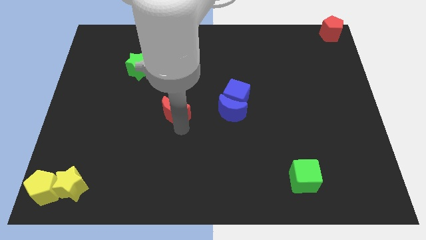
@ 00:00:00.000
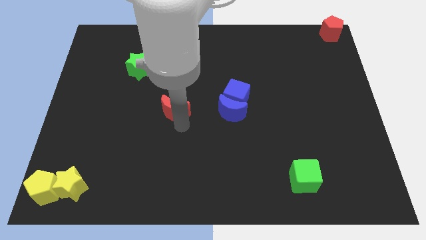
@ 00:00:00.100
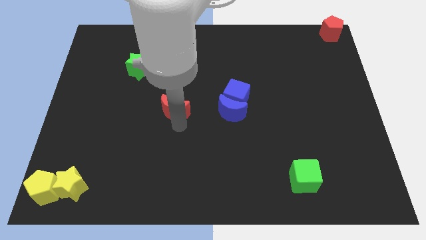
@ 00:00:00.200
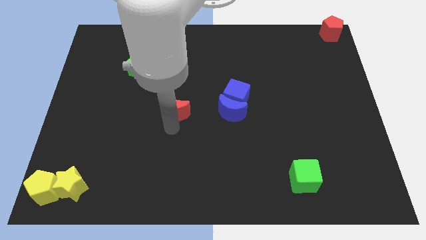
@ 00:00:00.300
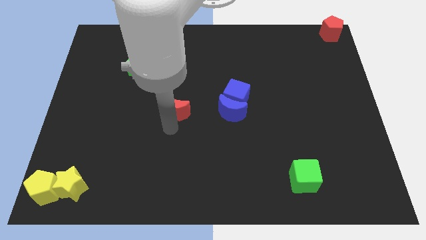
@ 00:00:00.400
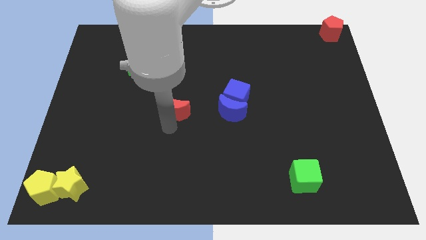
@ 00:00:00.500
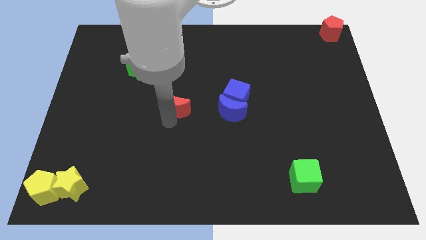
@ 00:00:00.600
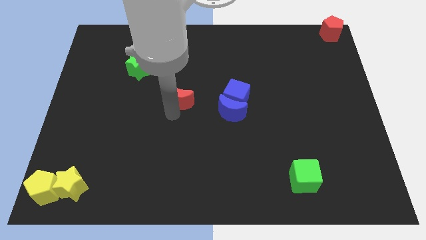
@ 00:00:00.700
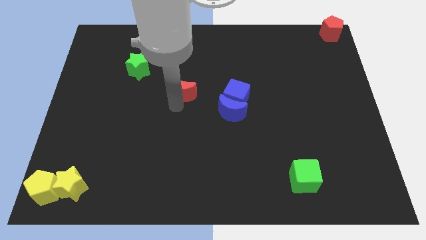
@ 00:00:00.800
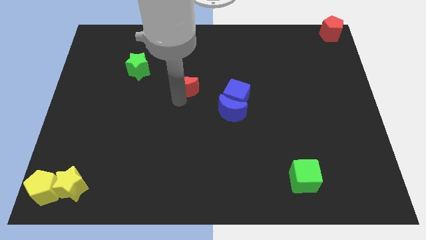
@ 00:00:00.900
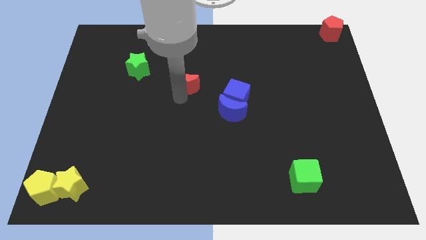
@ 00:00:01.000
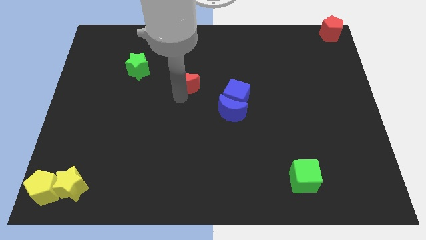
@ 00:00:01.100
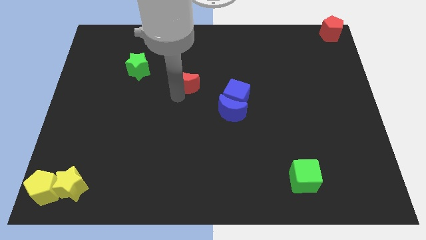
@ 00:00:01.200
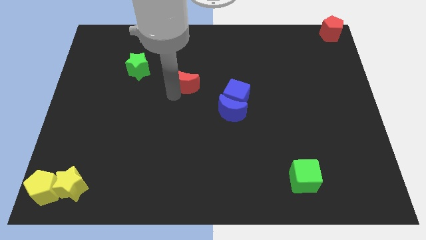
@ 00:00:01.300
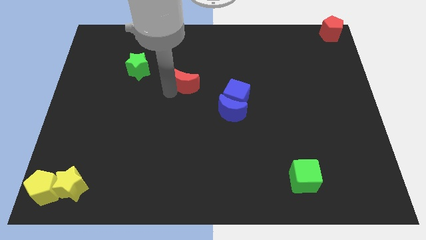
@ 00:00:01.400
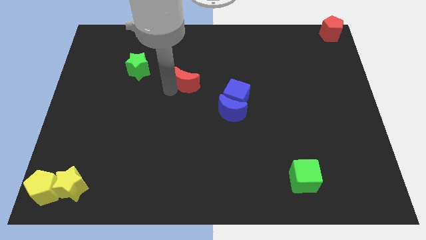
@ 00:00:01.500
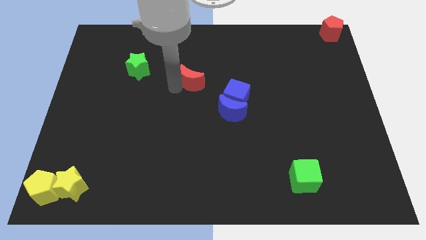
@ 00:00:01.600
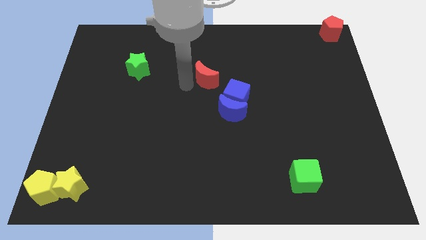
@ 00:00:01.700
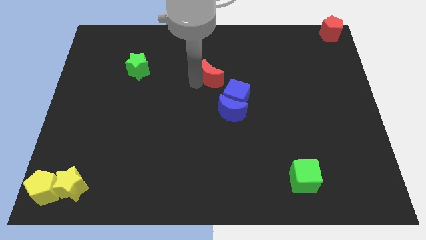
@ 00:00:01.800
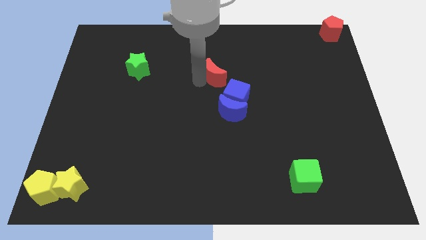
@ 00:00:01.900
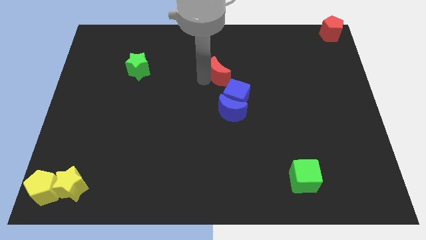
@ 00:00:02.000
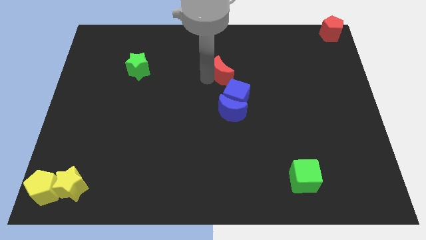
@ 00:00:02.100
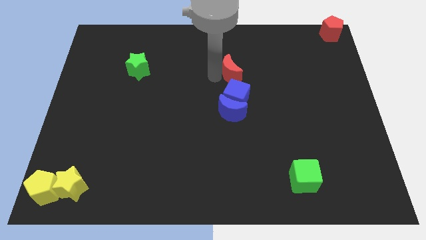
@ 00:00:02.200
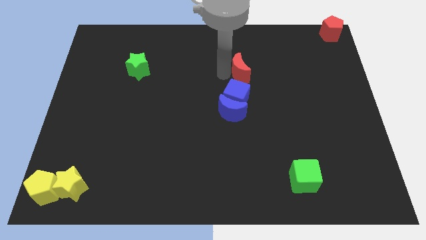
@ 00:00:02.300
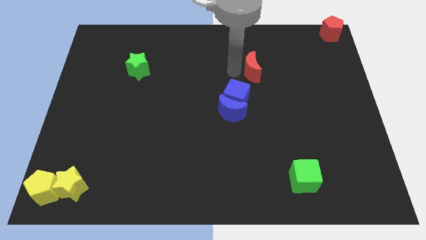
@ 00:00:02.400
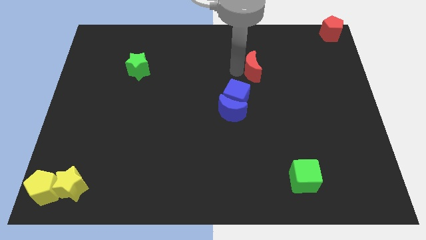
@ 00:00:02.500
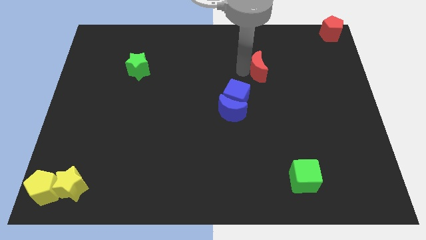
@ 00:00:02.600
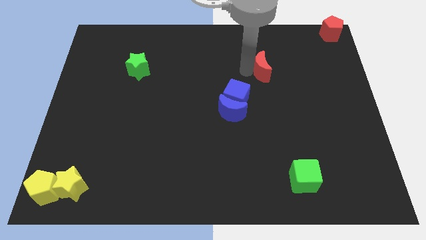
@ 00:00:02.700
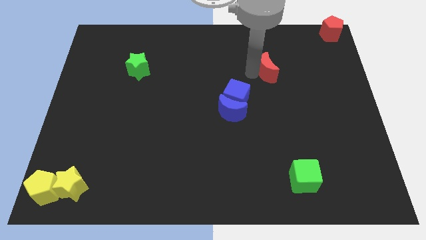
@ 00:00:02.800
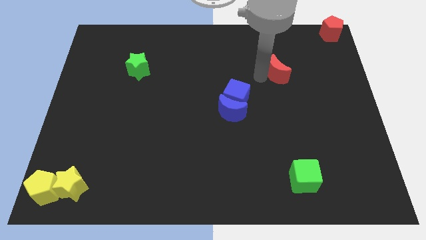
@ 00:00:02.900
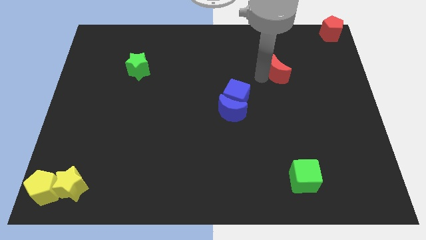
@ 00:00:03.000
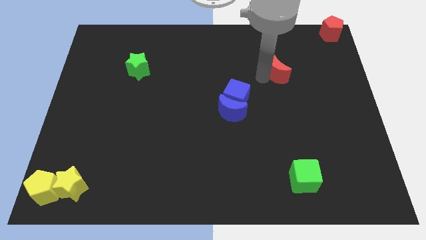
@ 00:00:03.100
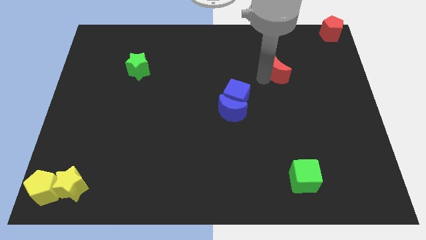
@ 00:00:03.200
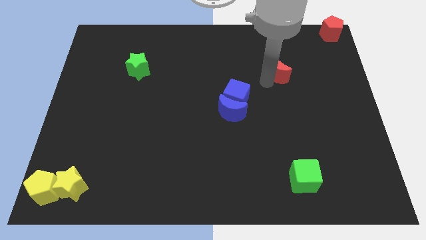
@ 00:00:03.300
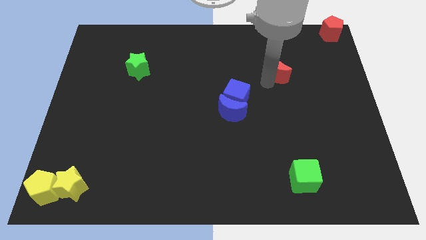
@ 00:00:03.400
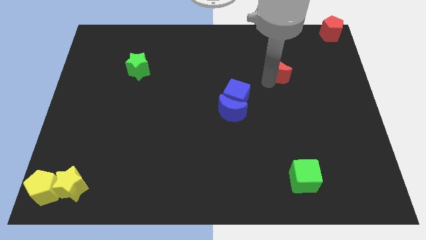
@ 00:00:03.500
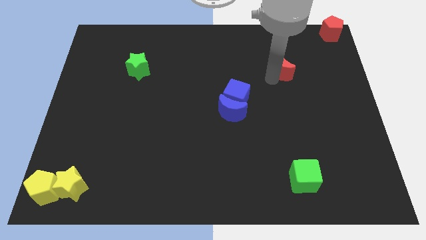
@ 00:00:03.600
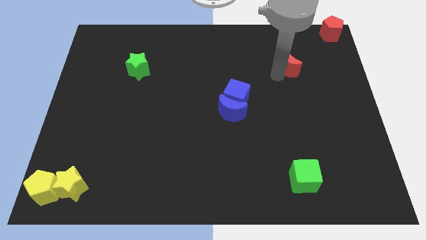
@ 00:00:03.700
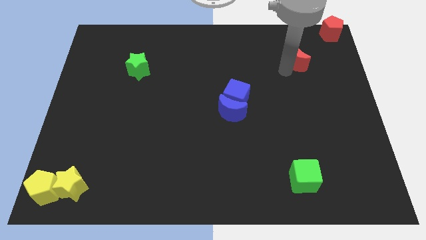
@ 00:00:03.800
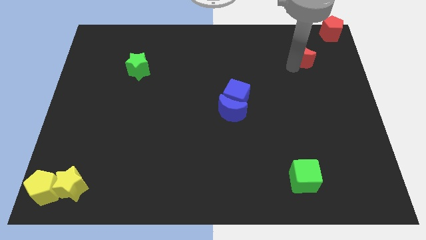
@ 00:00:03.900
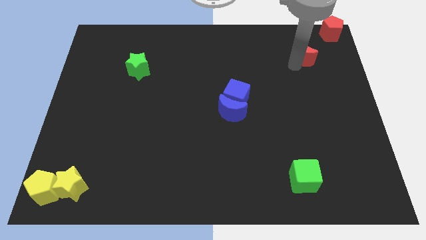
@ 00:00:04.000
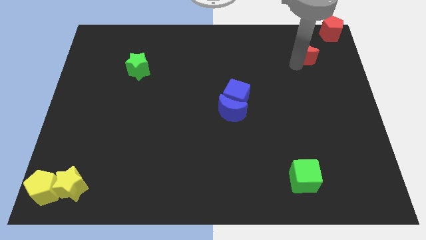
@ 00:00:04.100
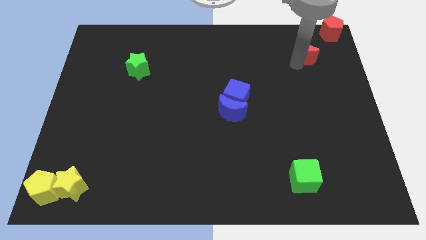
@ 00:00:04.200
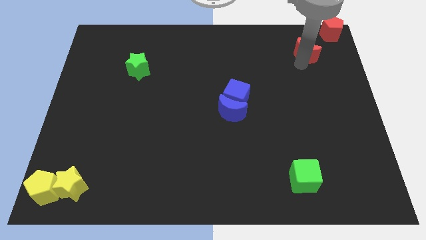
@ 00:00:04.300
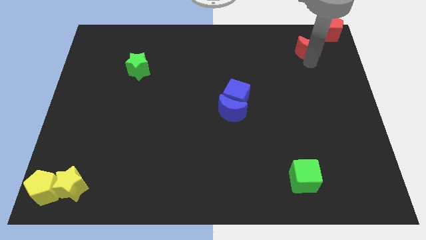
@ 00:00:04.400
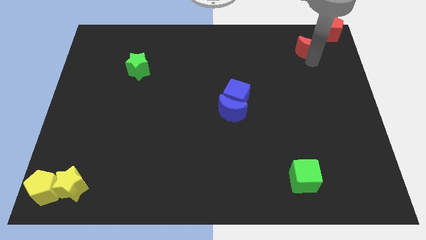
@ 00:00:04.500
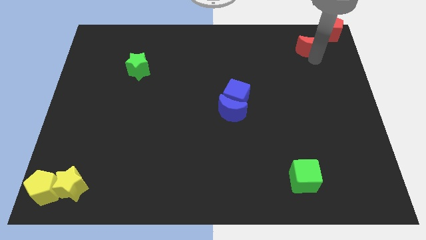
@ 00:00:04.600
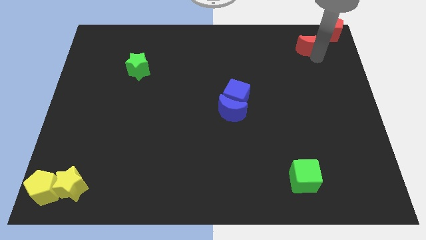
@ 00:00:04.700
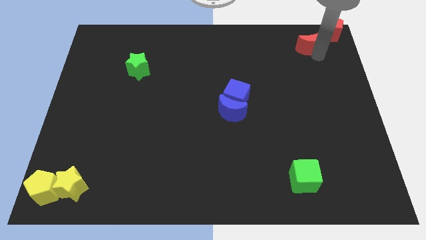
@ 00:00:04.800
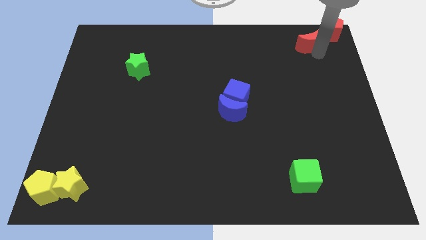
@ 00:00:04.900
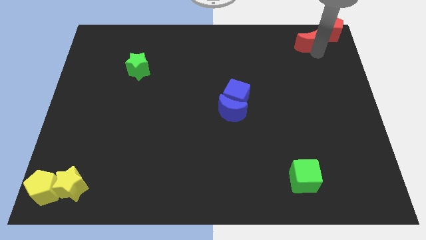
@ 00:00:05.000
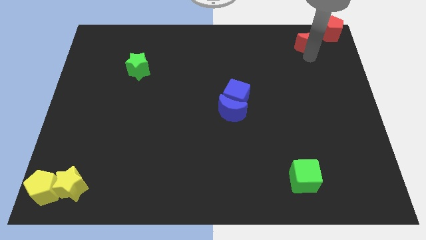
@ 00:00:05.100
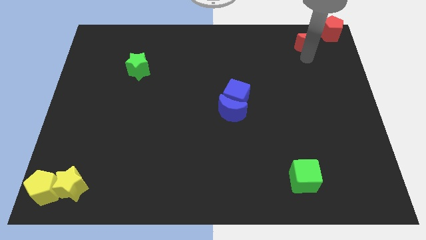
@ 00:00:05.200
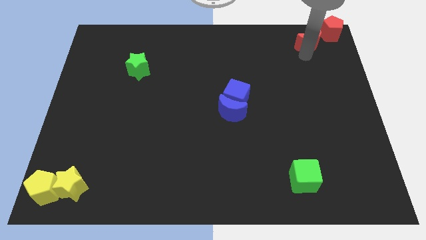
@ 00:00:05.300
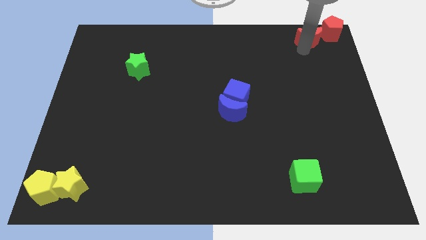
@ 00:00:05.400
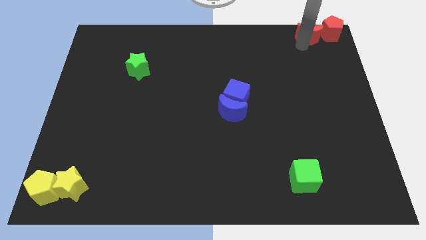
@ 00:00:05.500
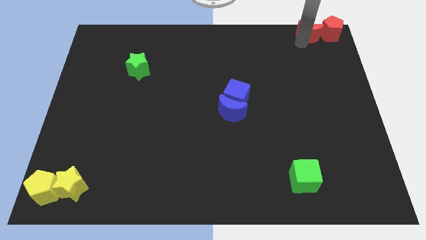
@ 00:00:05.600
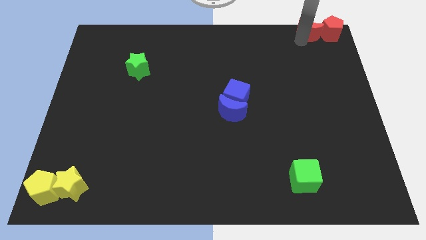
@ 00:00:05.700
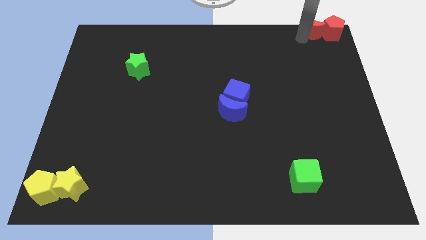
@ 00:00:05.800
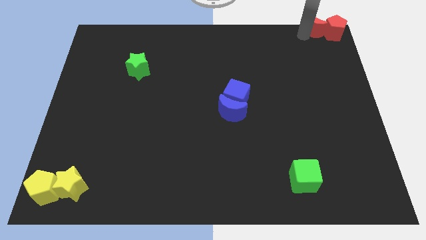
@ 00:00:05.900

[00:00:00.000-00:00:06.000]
push the red crescent to the left of the red pentagon

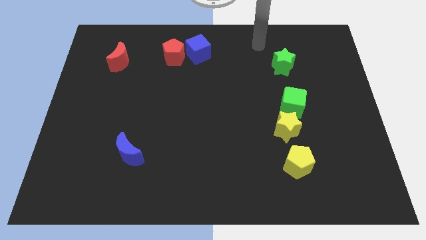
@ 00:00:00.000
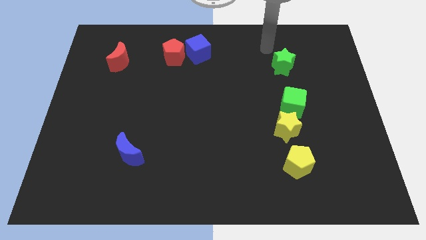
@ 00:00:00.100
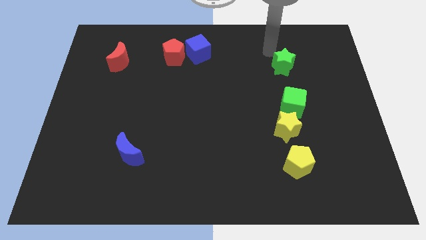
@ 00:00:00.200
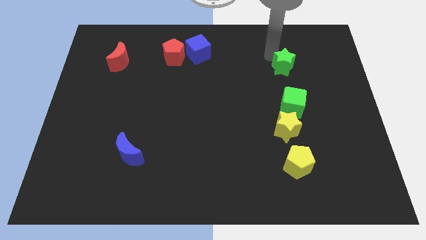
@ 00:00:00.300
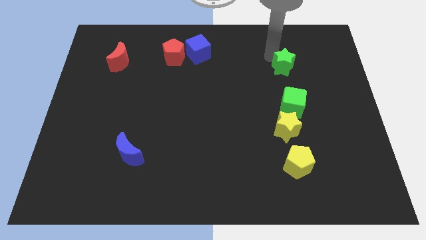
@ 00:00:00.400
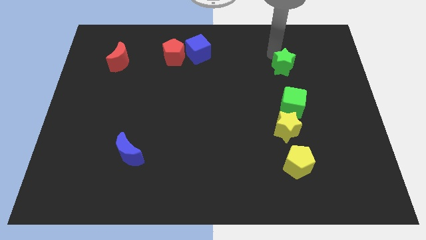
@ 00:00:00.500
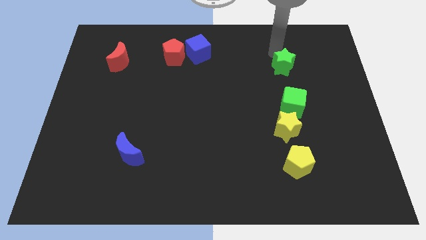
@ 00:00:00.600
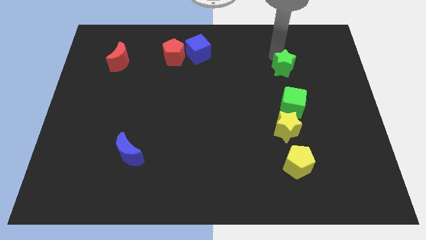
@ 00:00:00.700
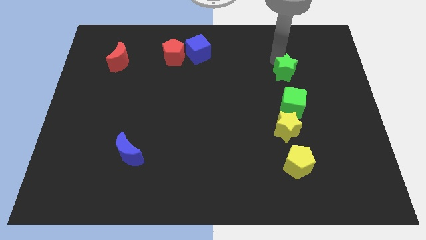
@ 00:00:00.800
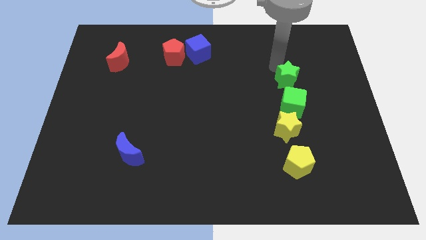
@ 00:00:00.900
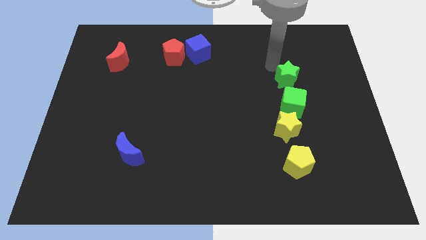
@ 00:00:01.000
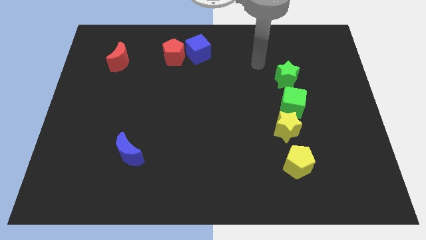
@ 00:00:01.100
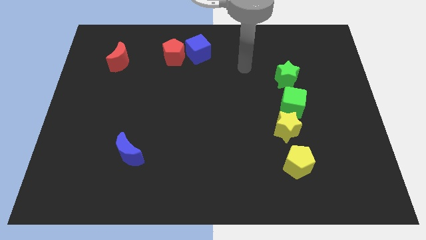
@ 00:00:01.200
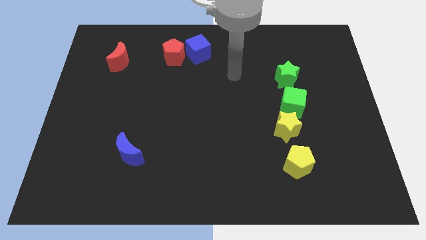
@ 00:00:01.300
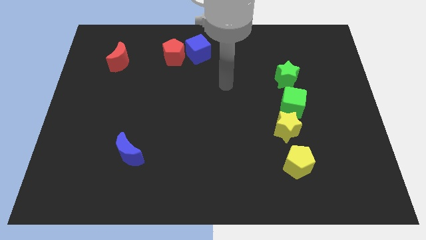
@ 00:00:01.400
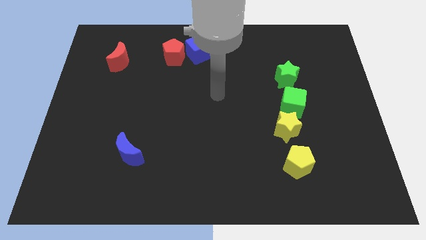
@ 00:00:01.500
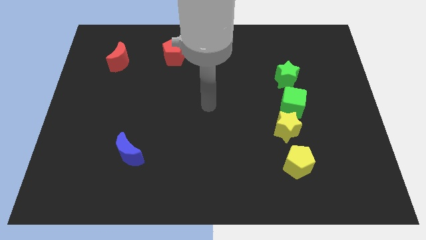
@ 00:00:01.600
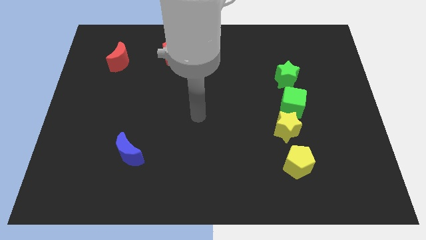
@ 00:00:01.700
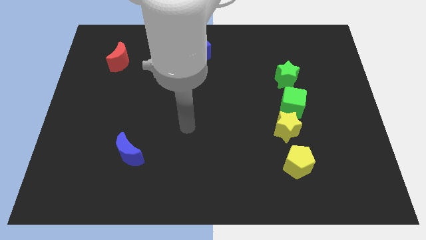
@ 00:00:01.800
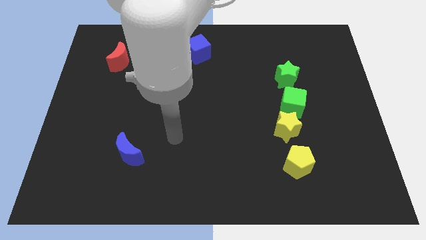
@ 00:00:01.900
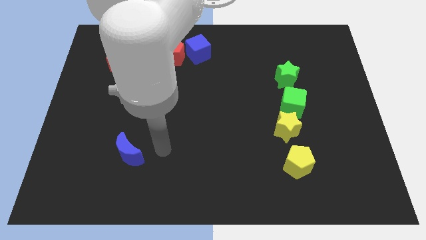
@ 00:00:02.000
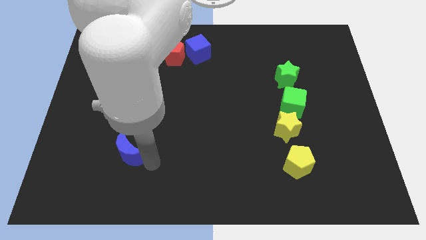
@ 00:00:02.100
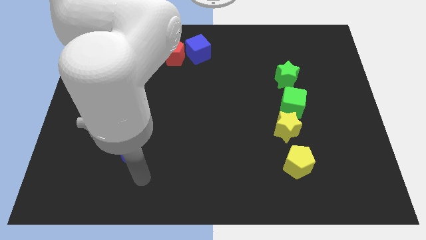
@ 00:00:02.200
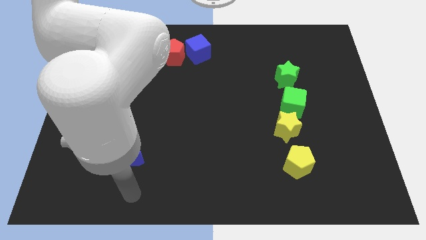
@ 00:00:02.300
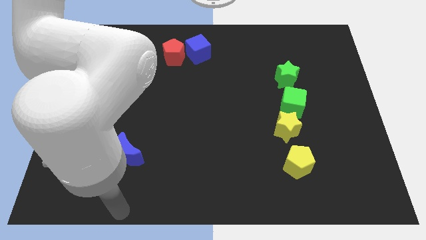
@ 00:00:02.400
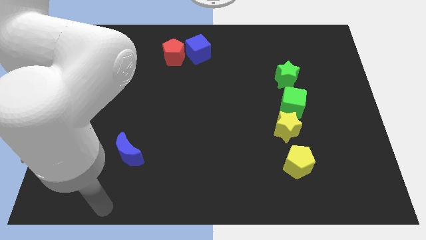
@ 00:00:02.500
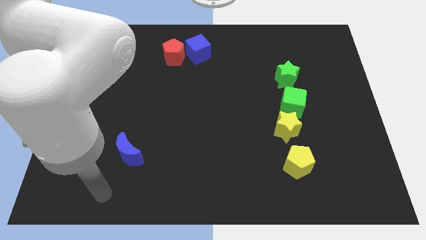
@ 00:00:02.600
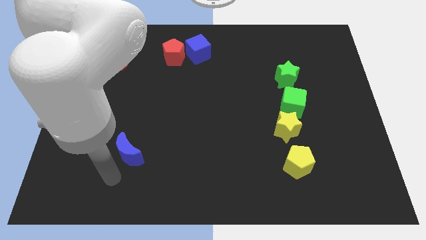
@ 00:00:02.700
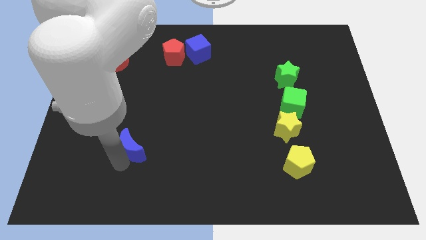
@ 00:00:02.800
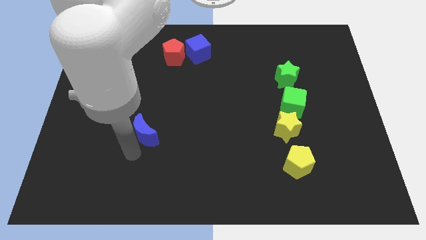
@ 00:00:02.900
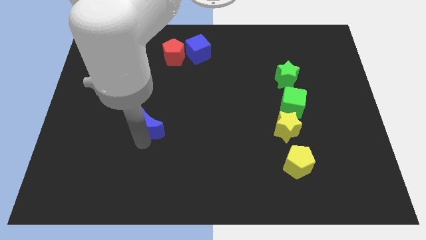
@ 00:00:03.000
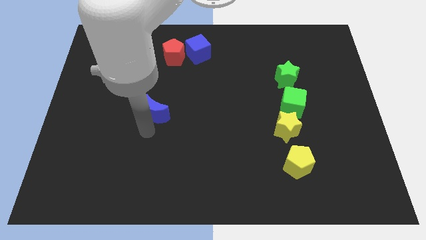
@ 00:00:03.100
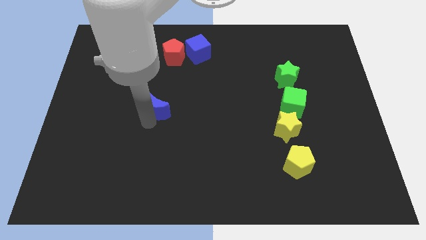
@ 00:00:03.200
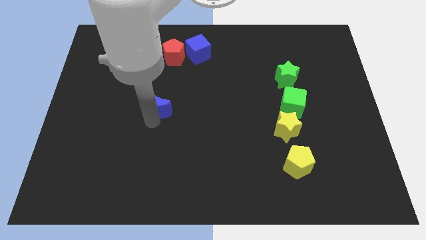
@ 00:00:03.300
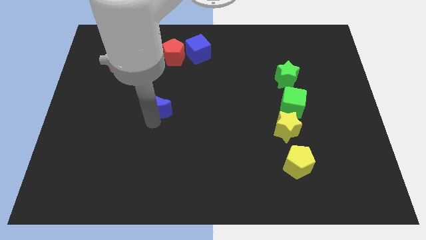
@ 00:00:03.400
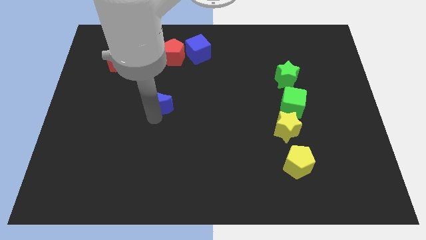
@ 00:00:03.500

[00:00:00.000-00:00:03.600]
slide the blue crescent towards the red pentagon
